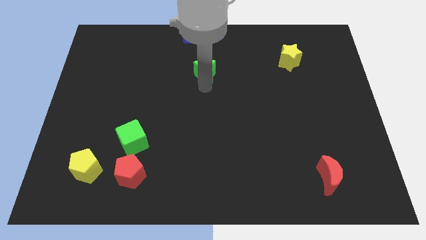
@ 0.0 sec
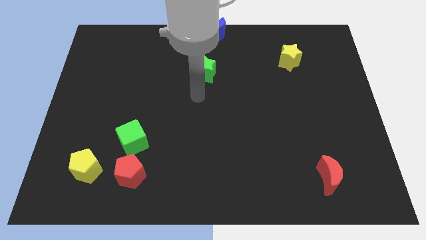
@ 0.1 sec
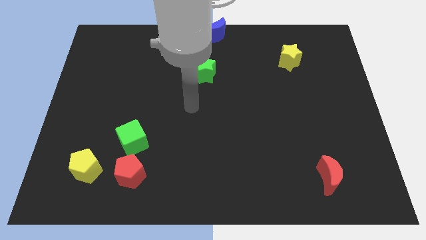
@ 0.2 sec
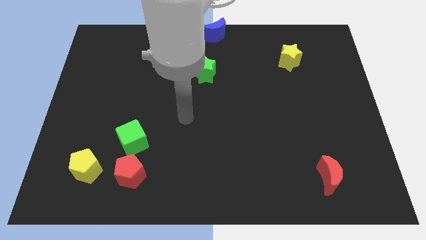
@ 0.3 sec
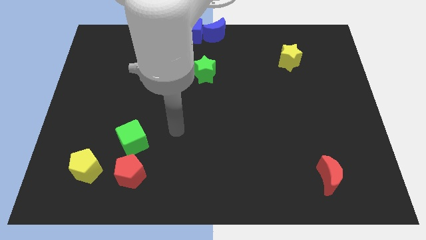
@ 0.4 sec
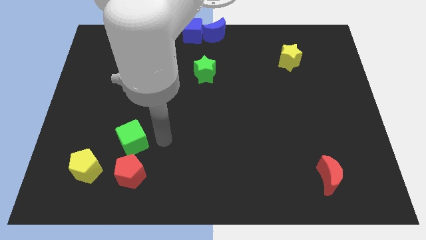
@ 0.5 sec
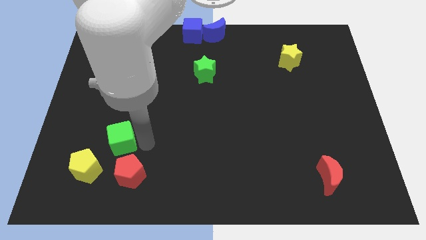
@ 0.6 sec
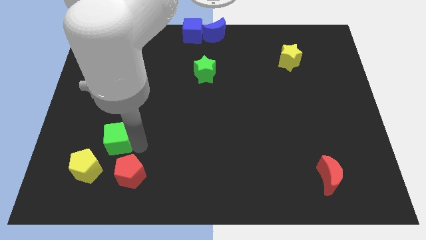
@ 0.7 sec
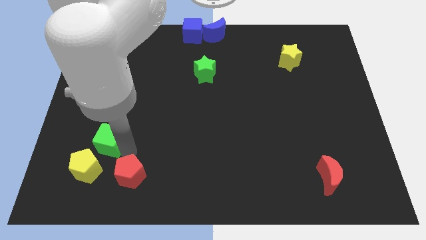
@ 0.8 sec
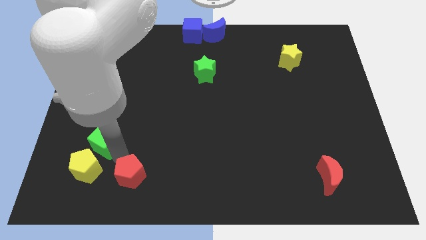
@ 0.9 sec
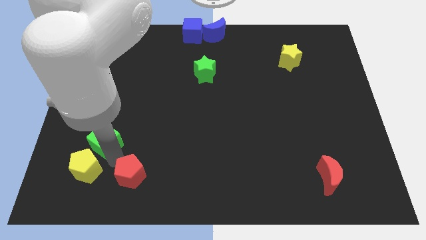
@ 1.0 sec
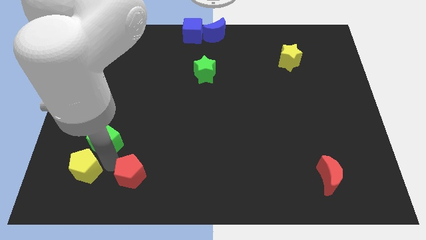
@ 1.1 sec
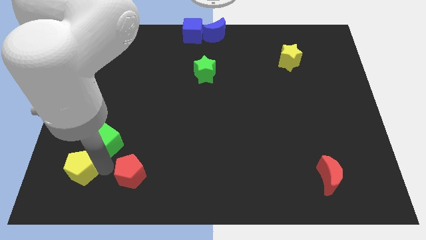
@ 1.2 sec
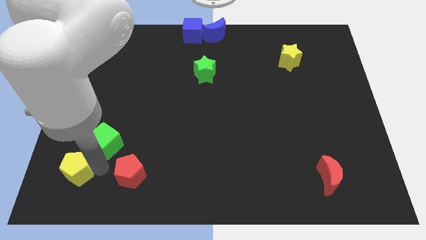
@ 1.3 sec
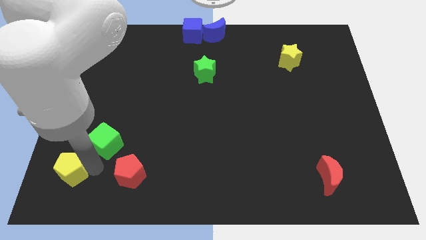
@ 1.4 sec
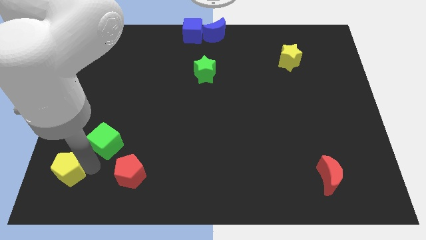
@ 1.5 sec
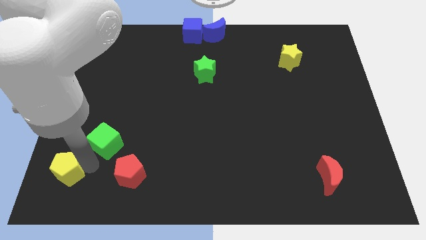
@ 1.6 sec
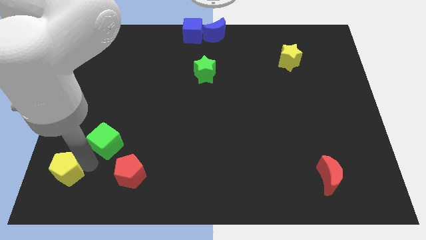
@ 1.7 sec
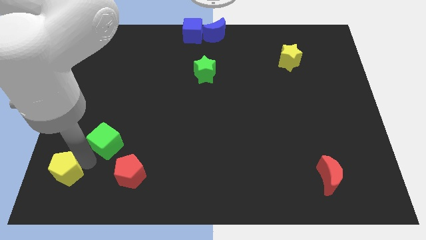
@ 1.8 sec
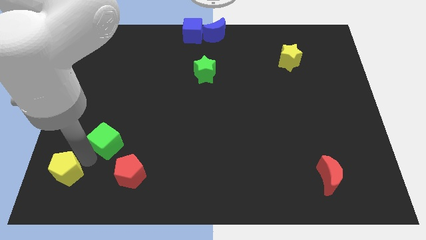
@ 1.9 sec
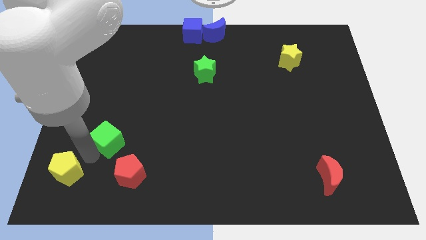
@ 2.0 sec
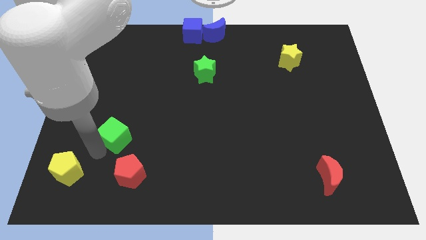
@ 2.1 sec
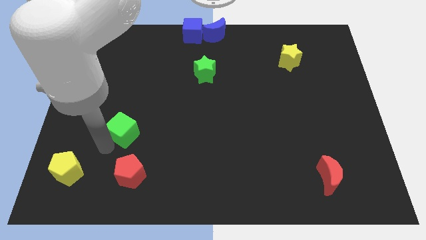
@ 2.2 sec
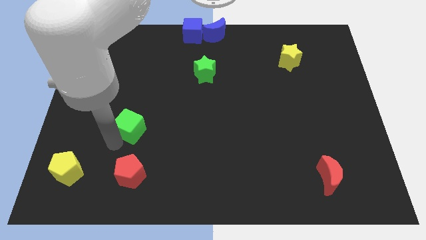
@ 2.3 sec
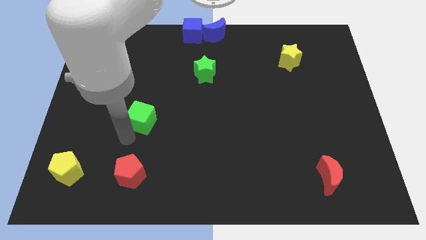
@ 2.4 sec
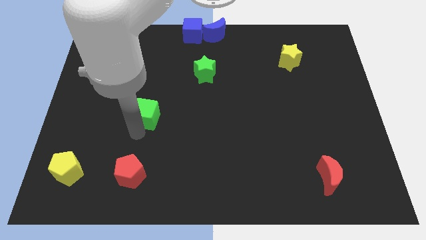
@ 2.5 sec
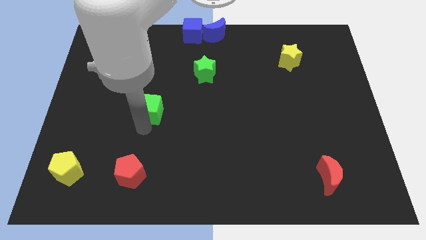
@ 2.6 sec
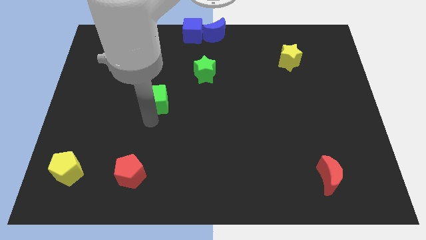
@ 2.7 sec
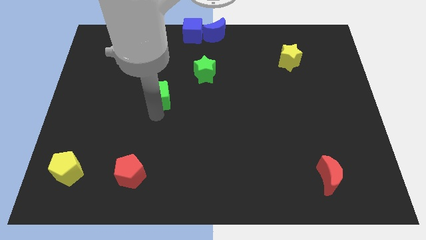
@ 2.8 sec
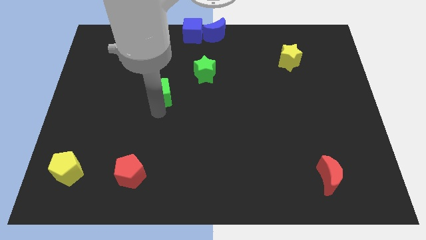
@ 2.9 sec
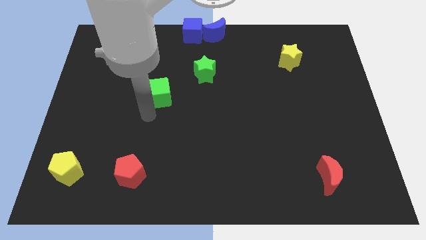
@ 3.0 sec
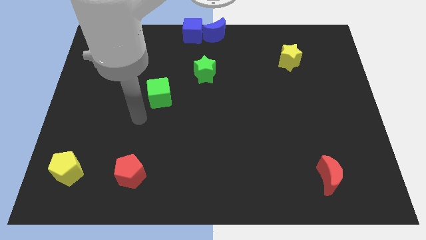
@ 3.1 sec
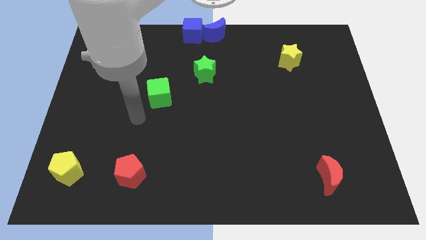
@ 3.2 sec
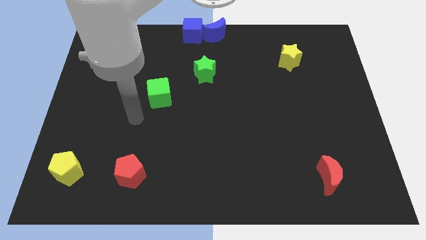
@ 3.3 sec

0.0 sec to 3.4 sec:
move your arm away from the green star

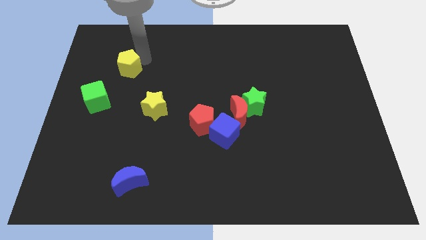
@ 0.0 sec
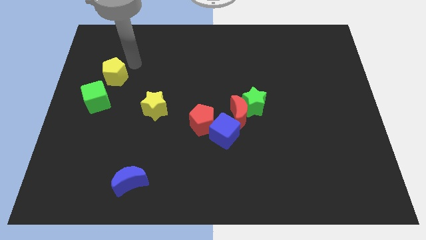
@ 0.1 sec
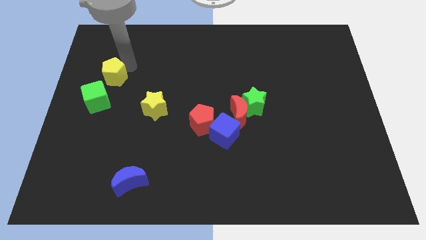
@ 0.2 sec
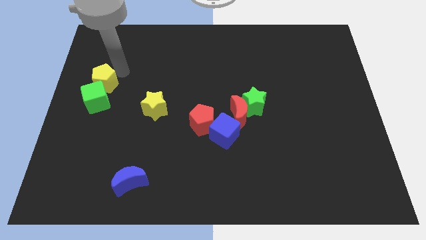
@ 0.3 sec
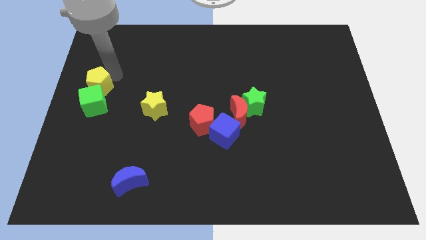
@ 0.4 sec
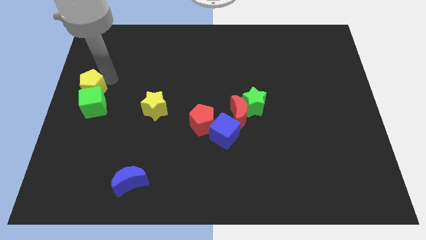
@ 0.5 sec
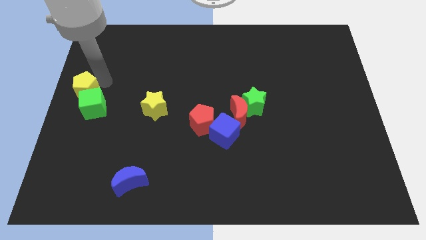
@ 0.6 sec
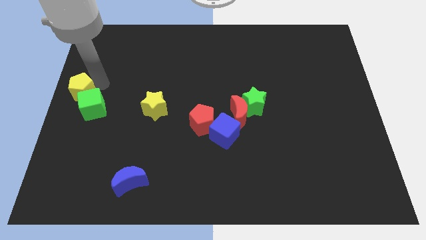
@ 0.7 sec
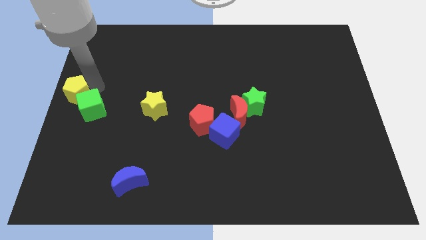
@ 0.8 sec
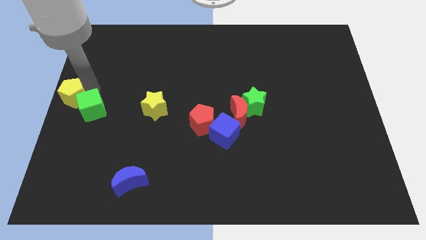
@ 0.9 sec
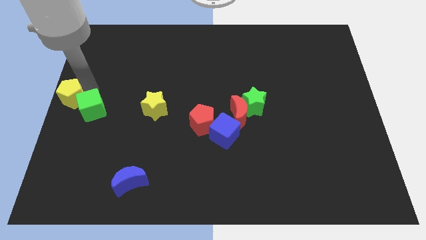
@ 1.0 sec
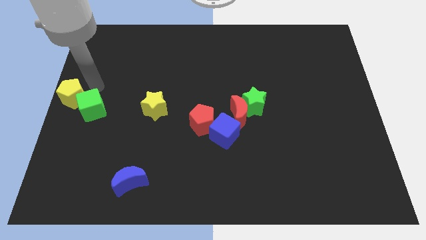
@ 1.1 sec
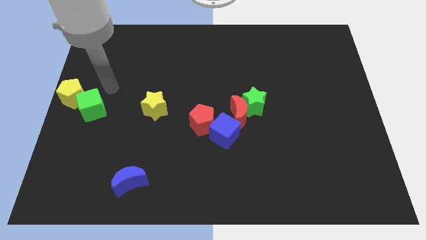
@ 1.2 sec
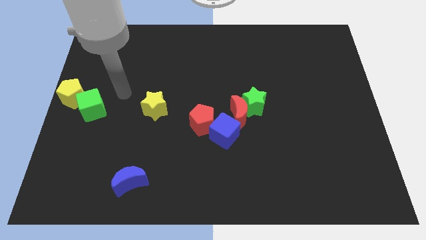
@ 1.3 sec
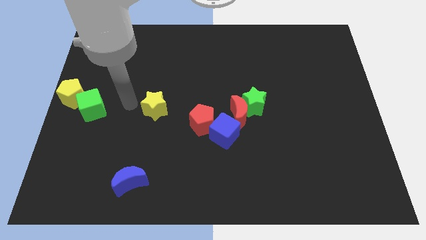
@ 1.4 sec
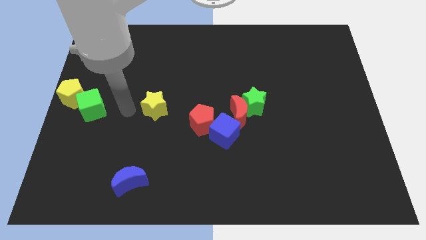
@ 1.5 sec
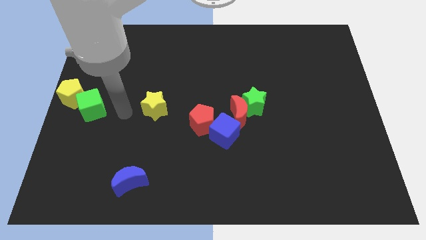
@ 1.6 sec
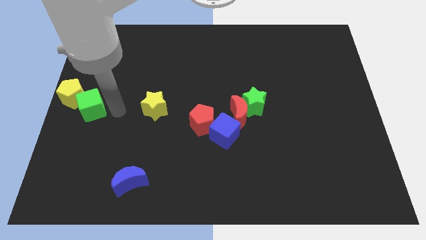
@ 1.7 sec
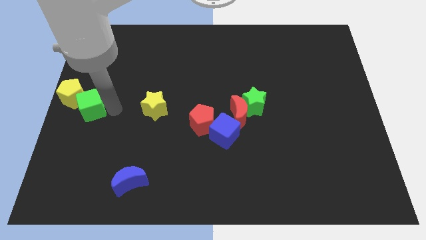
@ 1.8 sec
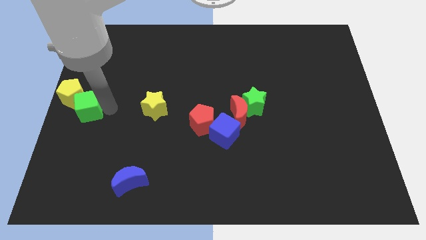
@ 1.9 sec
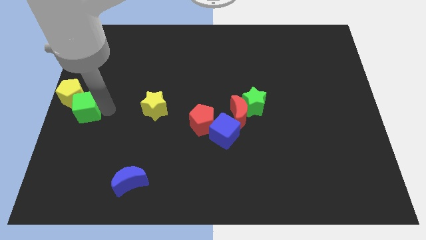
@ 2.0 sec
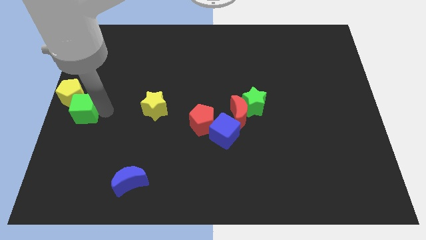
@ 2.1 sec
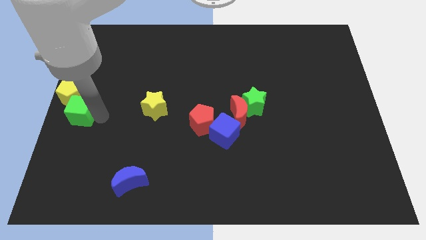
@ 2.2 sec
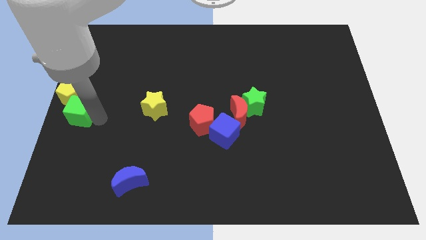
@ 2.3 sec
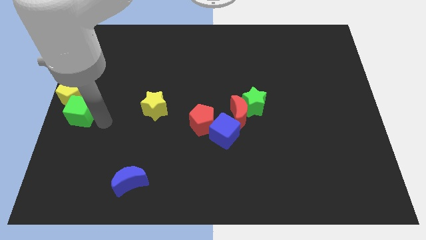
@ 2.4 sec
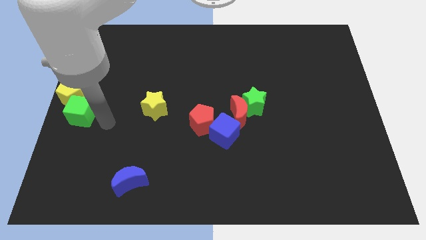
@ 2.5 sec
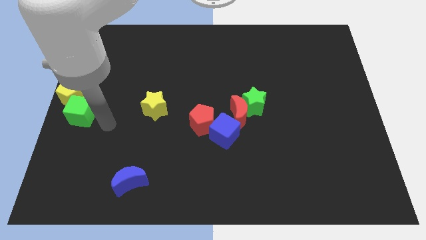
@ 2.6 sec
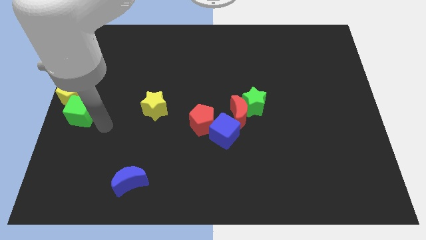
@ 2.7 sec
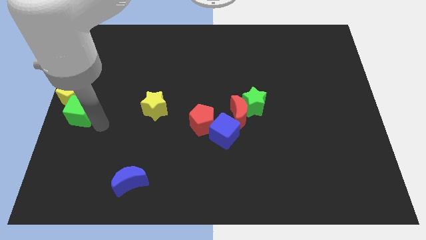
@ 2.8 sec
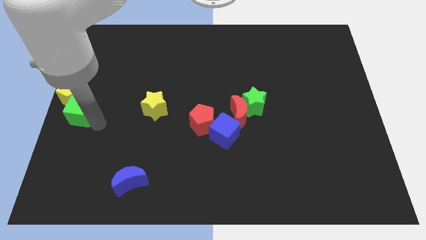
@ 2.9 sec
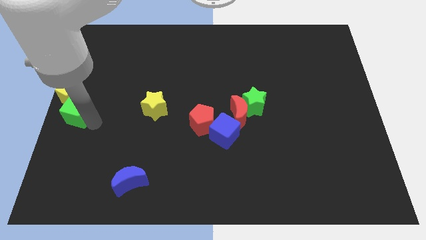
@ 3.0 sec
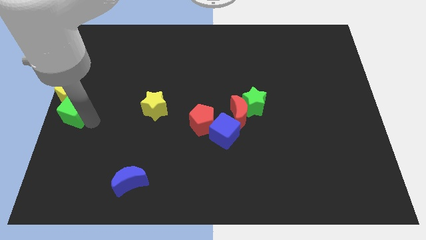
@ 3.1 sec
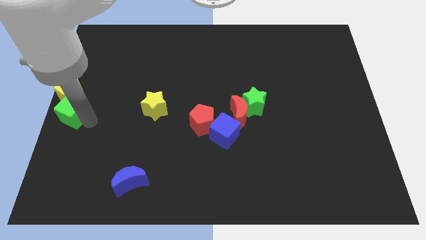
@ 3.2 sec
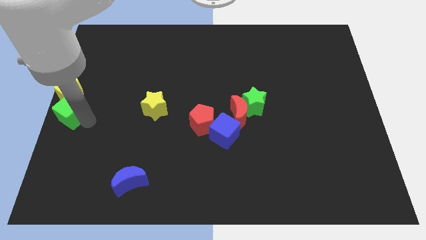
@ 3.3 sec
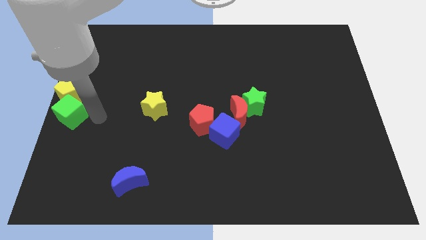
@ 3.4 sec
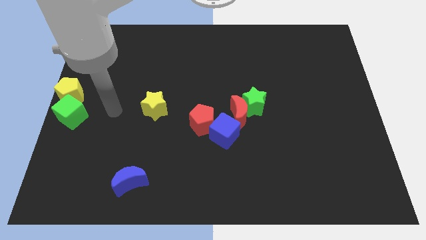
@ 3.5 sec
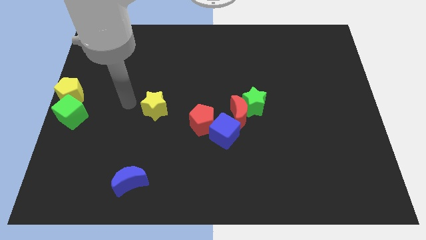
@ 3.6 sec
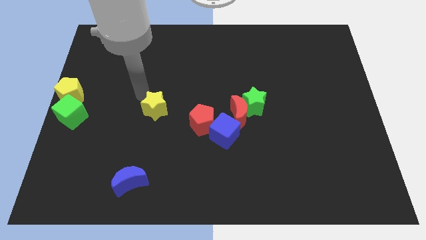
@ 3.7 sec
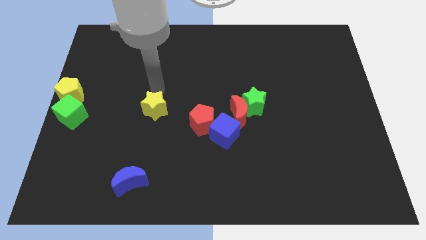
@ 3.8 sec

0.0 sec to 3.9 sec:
push the yellow pentagon along with the green cube to the left center of the board

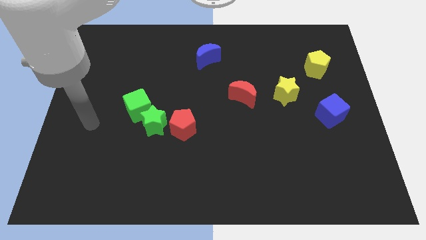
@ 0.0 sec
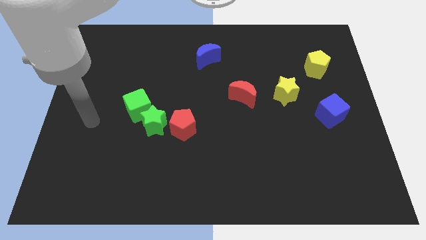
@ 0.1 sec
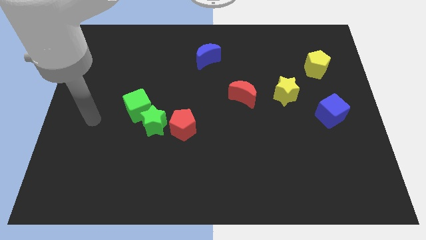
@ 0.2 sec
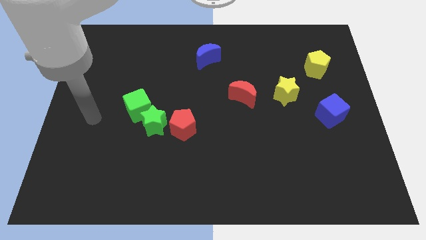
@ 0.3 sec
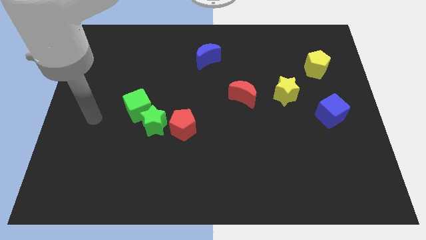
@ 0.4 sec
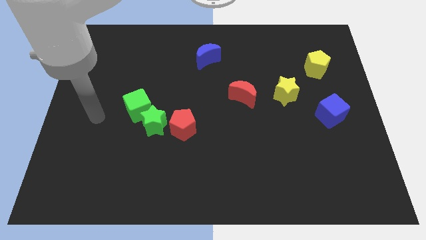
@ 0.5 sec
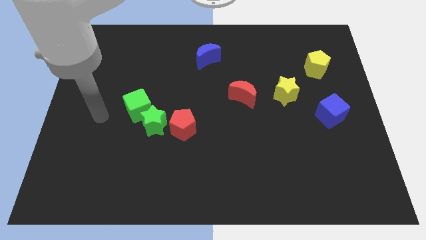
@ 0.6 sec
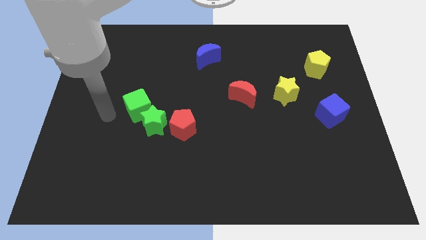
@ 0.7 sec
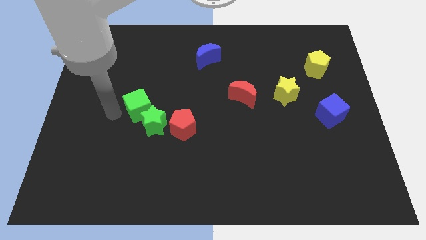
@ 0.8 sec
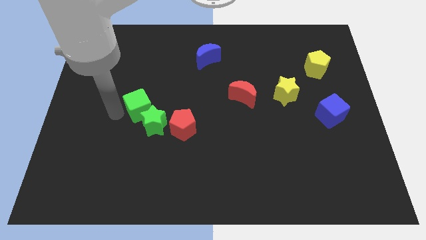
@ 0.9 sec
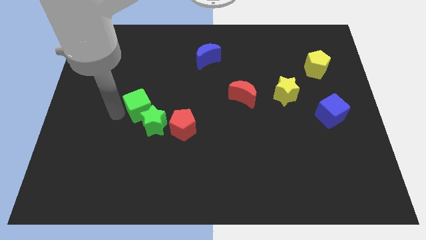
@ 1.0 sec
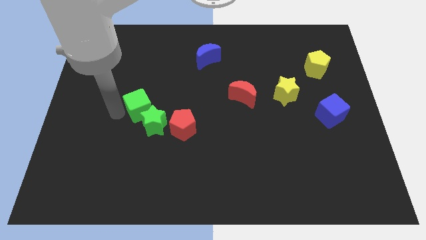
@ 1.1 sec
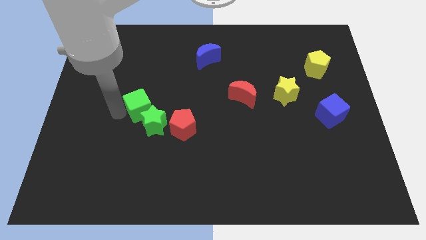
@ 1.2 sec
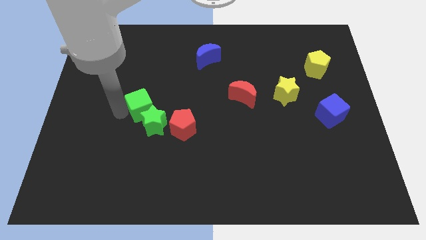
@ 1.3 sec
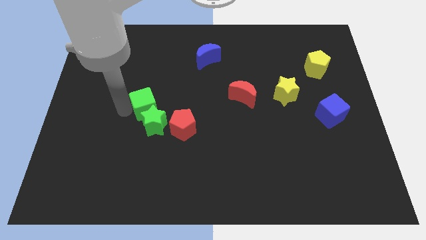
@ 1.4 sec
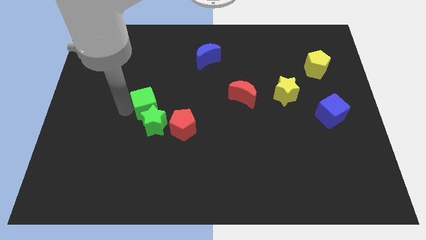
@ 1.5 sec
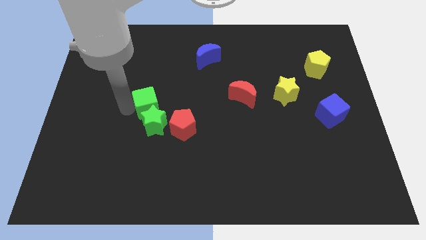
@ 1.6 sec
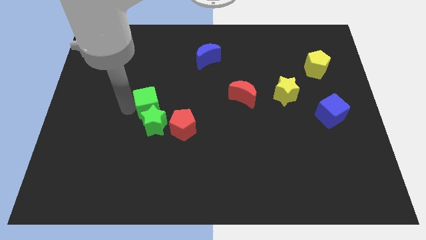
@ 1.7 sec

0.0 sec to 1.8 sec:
move the green cube slightly to the right
